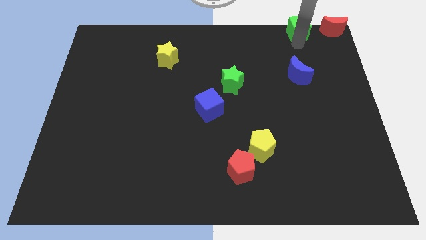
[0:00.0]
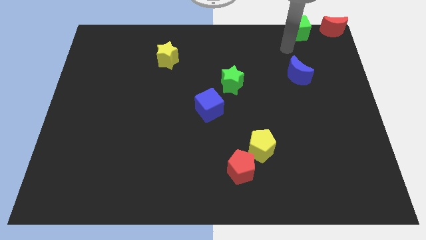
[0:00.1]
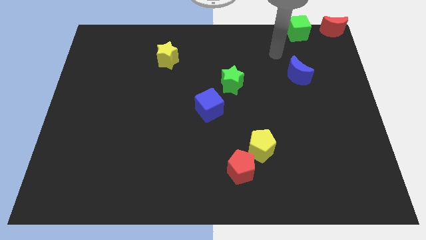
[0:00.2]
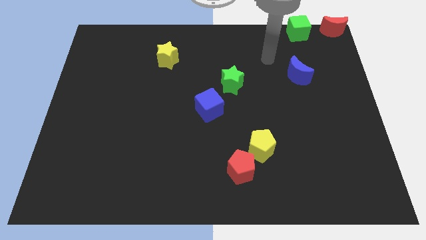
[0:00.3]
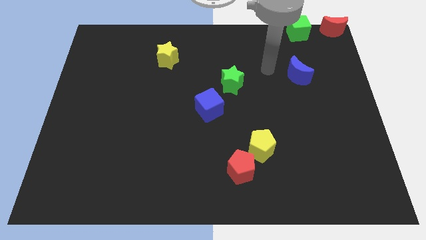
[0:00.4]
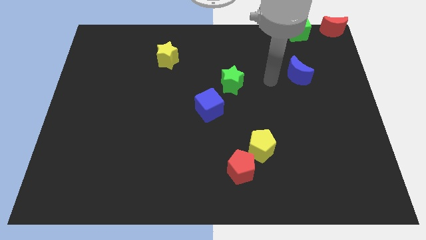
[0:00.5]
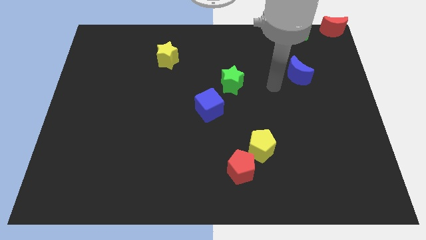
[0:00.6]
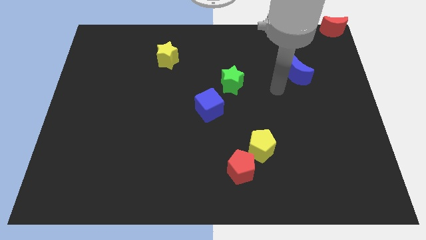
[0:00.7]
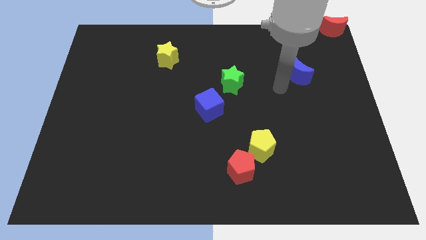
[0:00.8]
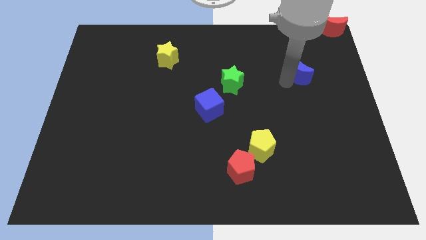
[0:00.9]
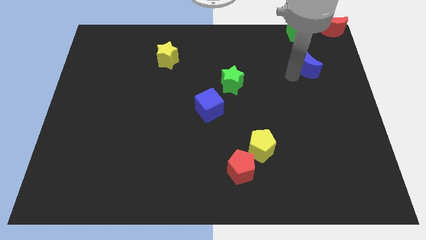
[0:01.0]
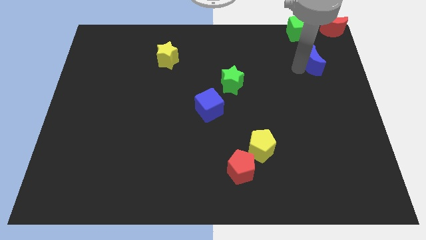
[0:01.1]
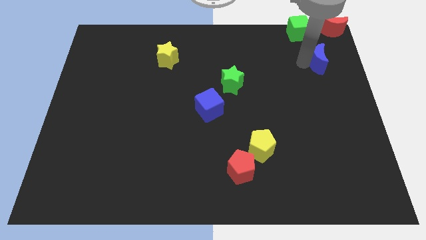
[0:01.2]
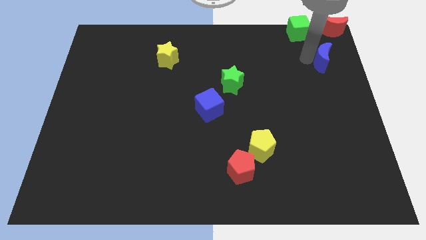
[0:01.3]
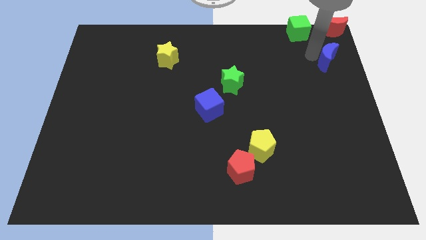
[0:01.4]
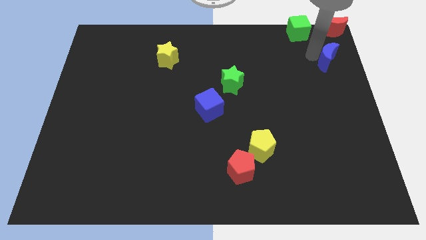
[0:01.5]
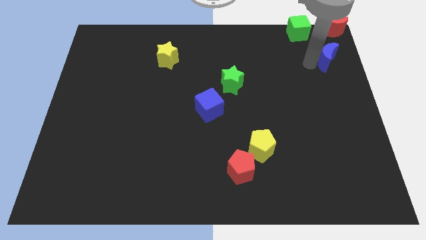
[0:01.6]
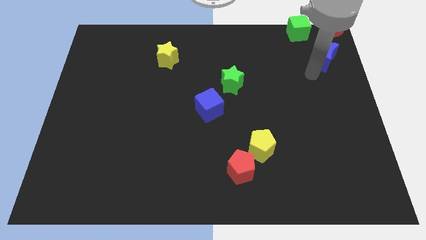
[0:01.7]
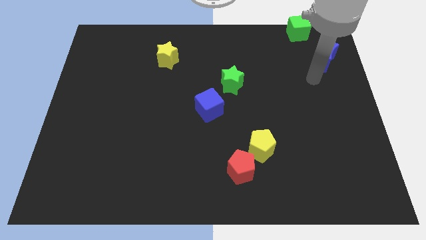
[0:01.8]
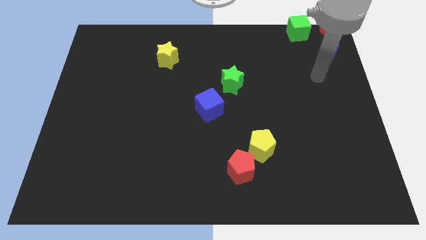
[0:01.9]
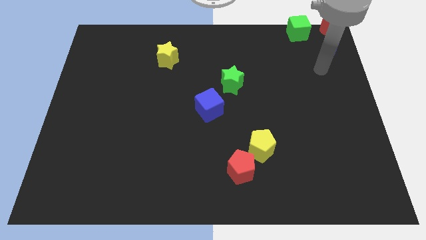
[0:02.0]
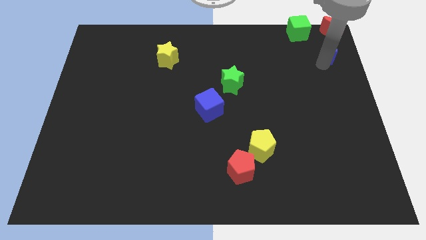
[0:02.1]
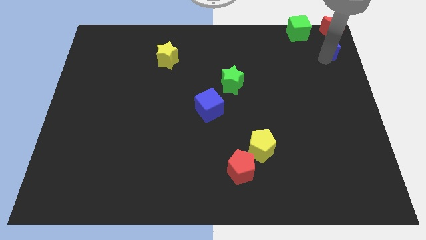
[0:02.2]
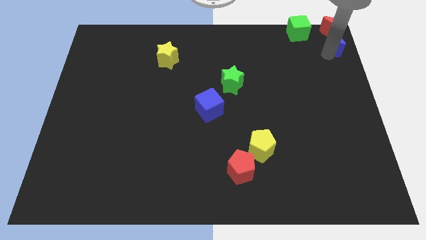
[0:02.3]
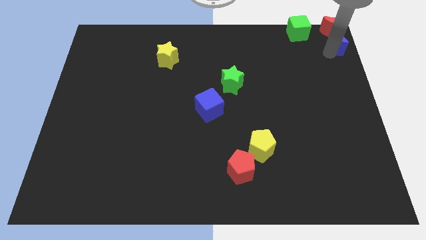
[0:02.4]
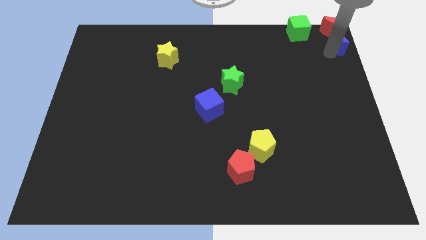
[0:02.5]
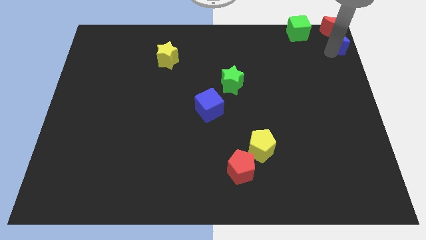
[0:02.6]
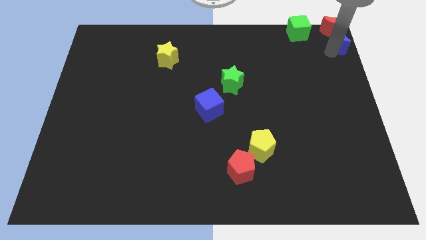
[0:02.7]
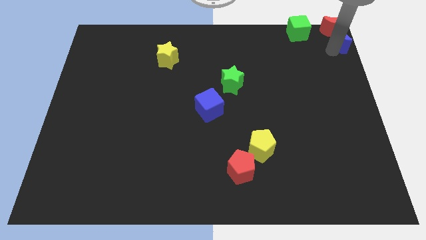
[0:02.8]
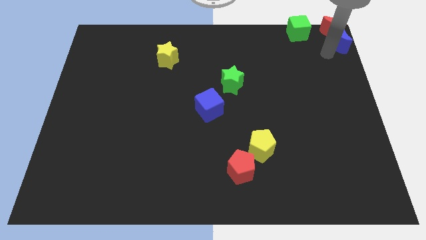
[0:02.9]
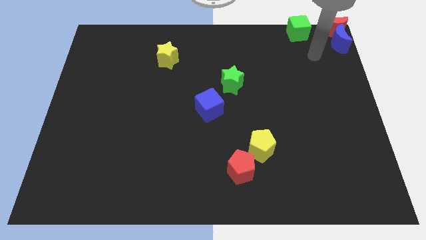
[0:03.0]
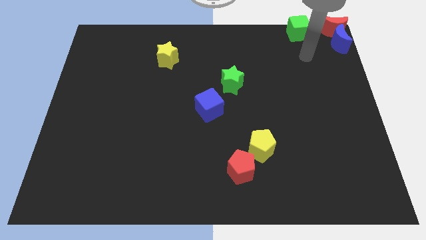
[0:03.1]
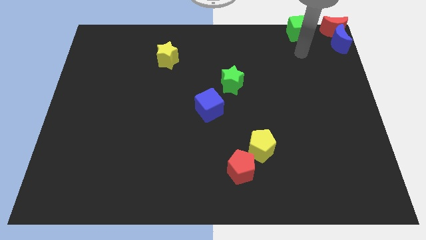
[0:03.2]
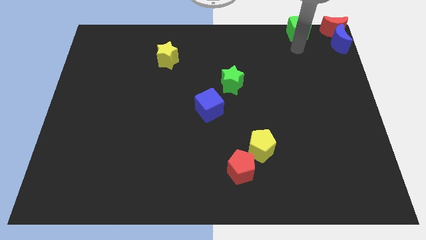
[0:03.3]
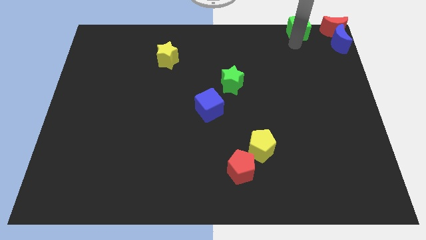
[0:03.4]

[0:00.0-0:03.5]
place blue moon to the bottom of red moon

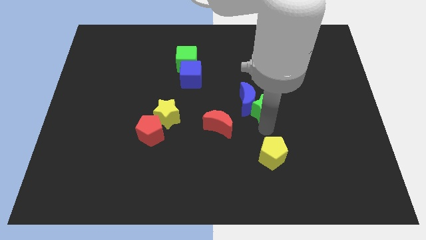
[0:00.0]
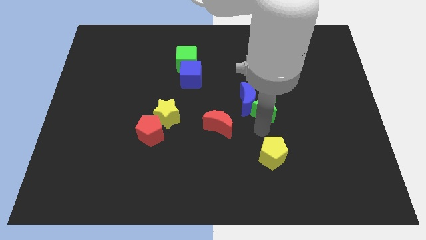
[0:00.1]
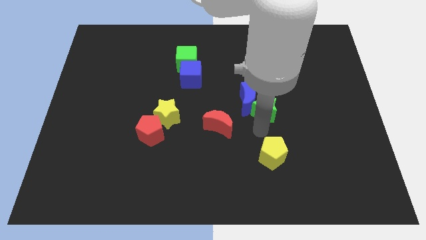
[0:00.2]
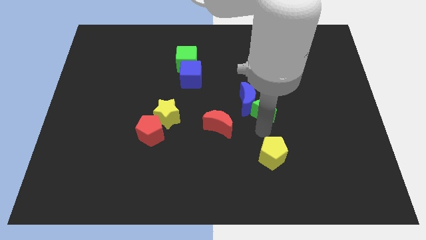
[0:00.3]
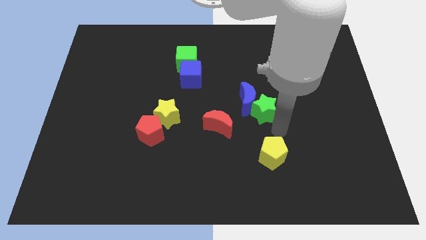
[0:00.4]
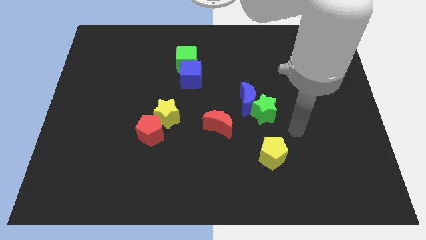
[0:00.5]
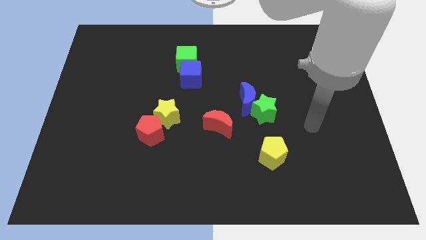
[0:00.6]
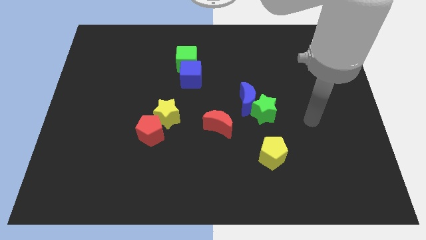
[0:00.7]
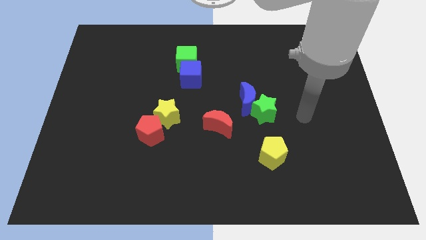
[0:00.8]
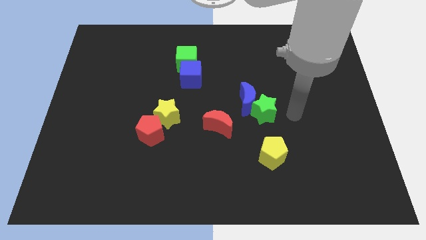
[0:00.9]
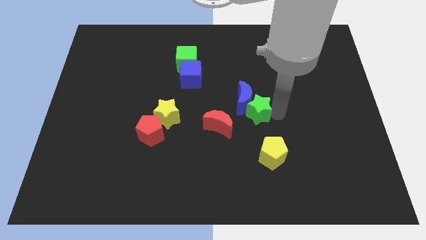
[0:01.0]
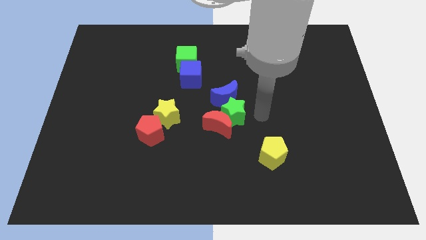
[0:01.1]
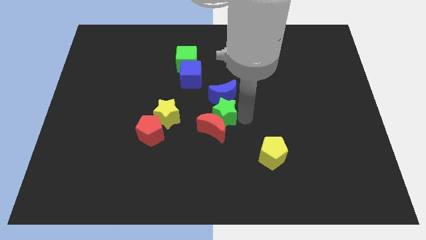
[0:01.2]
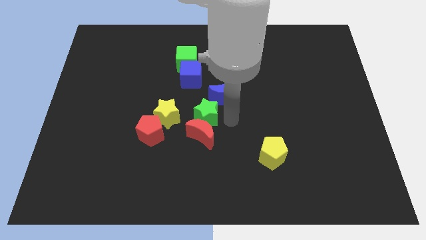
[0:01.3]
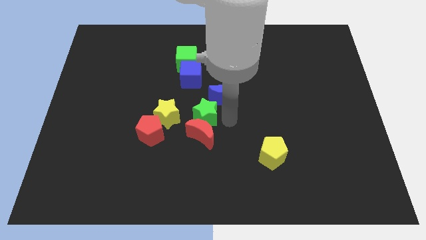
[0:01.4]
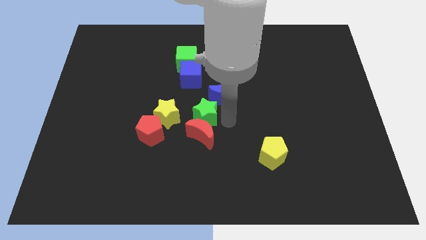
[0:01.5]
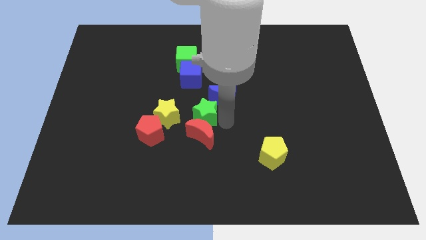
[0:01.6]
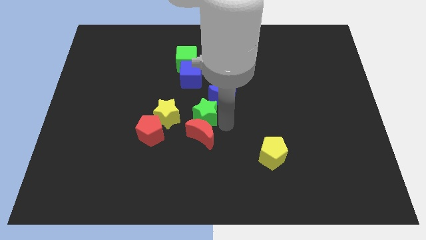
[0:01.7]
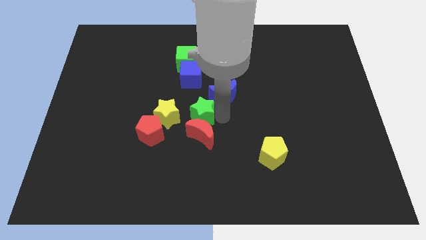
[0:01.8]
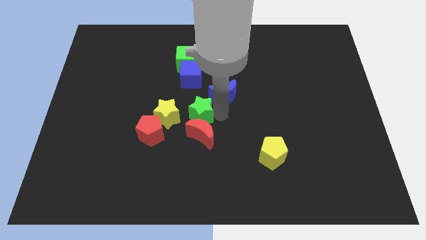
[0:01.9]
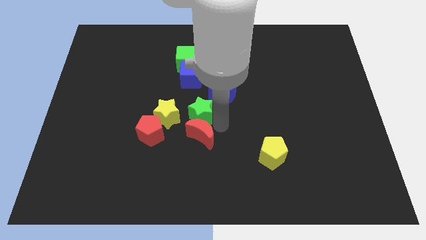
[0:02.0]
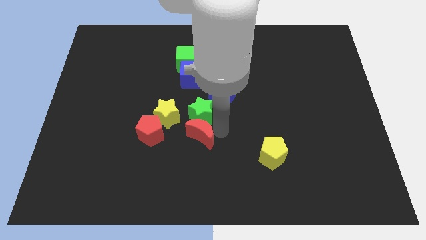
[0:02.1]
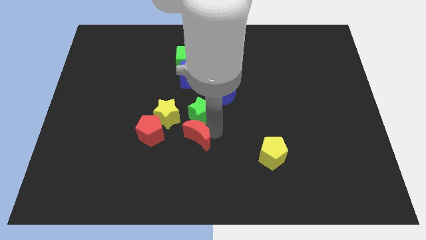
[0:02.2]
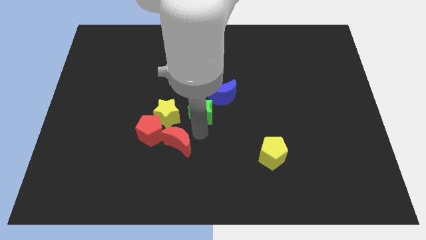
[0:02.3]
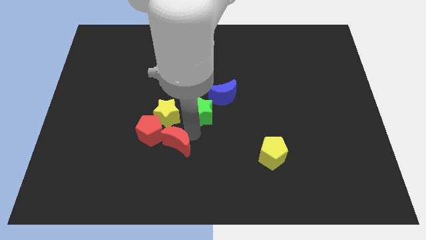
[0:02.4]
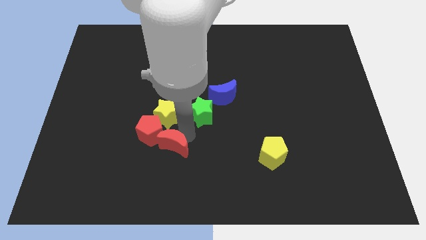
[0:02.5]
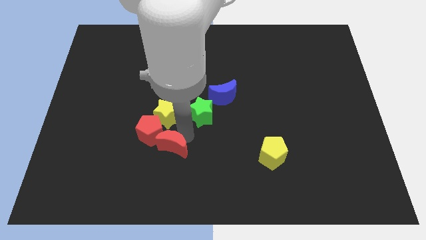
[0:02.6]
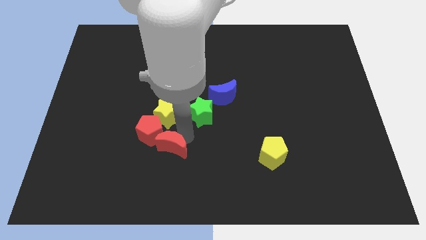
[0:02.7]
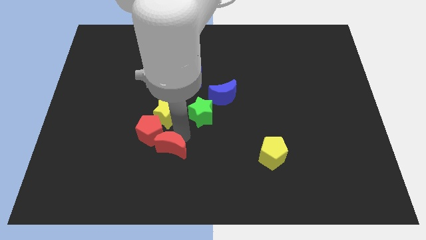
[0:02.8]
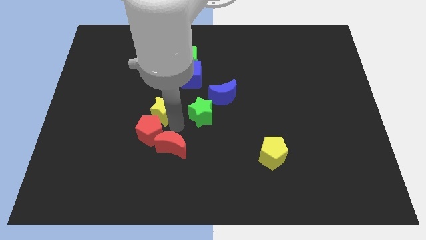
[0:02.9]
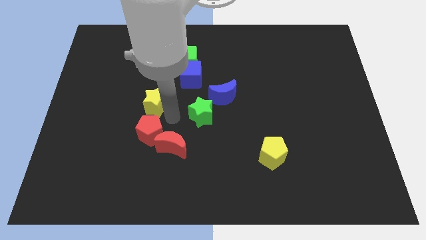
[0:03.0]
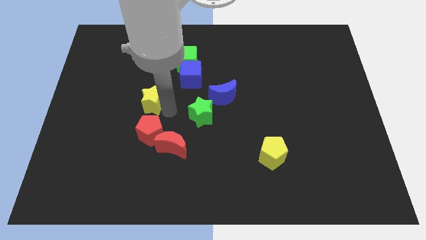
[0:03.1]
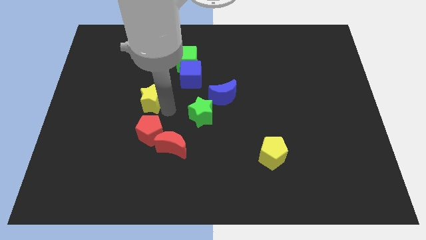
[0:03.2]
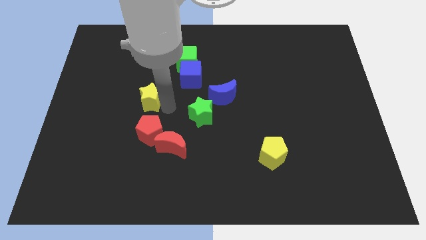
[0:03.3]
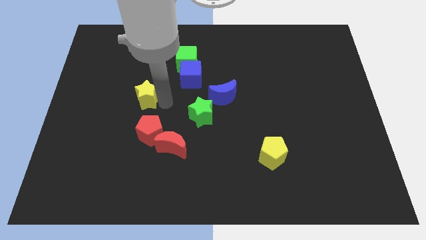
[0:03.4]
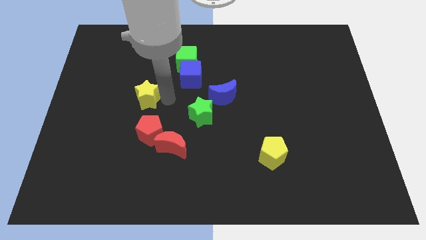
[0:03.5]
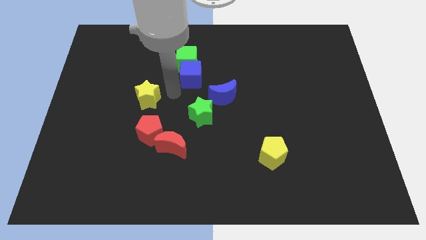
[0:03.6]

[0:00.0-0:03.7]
separate the yellow star from a group of objects

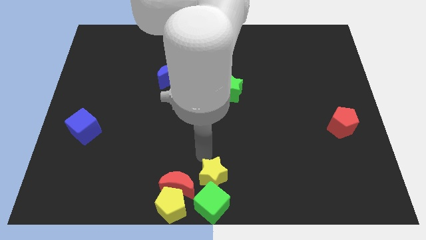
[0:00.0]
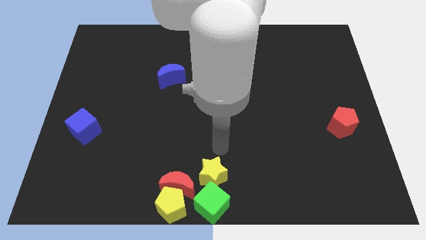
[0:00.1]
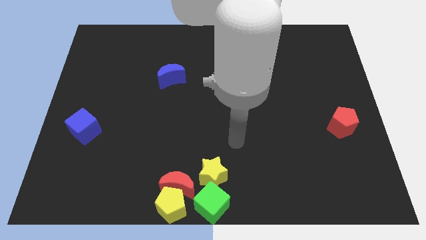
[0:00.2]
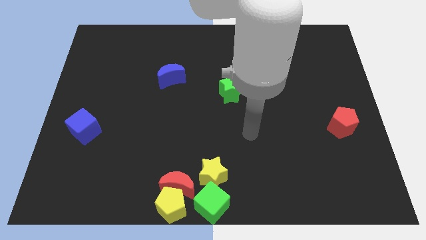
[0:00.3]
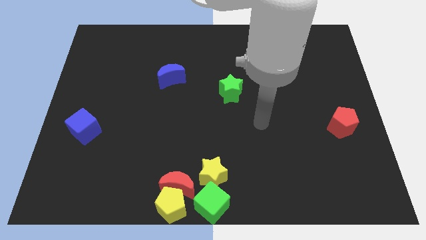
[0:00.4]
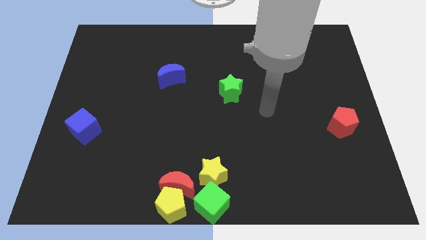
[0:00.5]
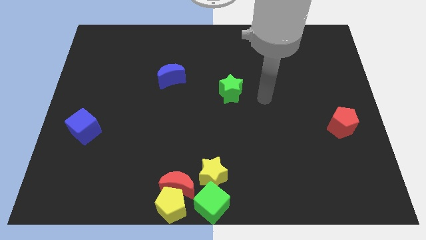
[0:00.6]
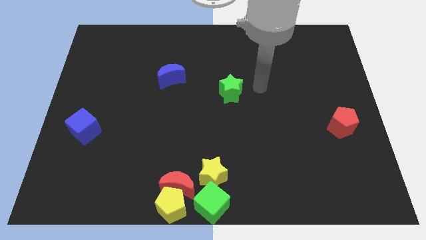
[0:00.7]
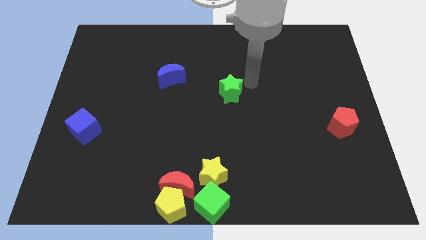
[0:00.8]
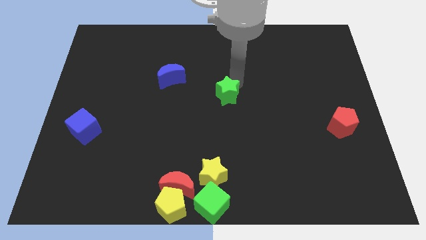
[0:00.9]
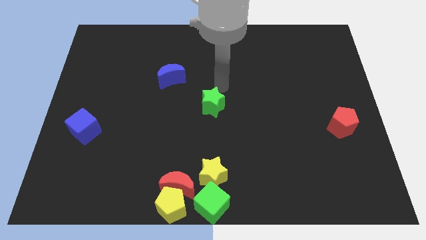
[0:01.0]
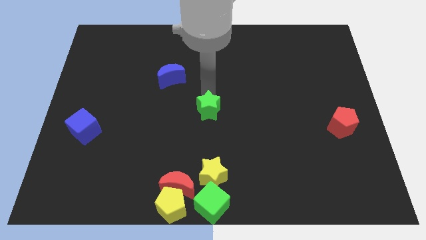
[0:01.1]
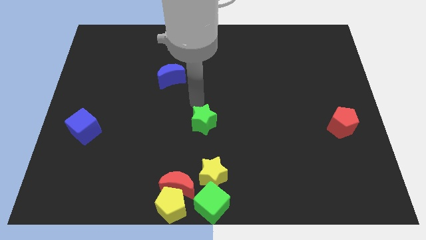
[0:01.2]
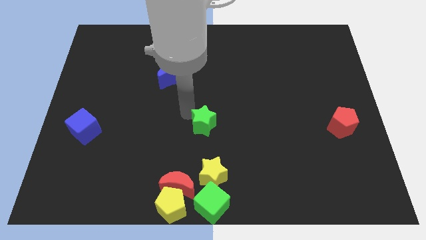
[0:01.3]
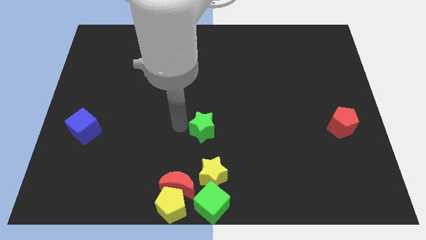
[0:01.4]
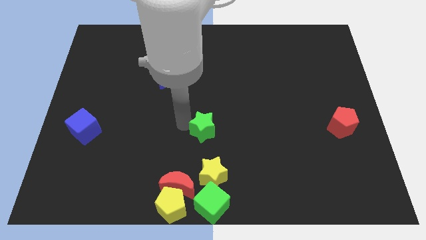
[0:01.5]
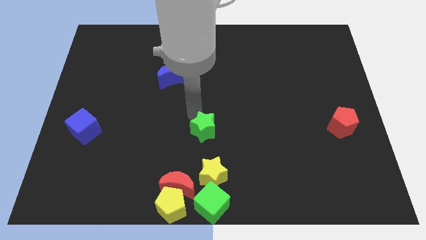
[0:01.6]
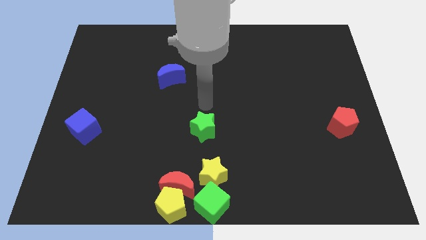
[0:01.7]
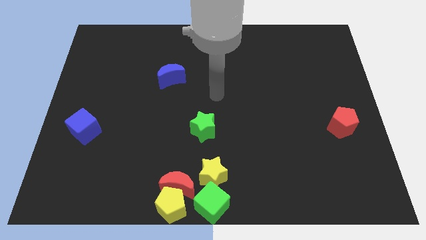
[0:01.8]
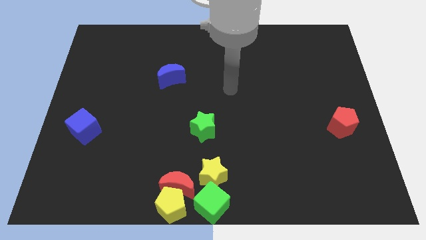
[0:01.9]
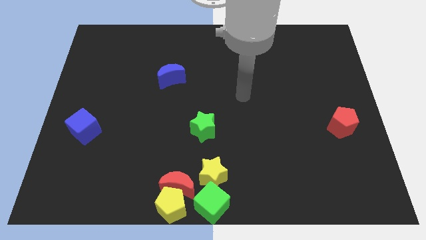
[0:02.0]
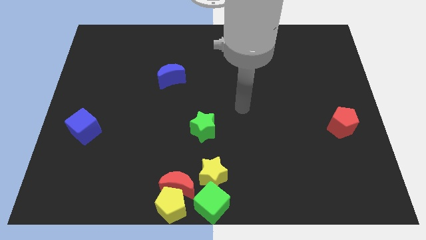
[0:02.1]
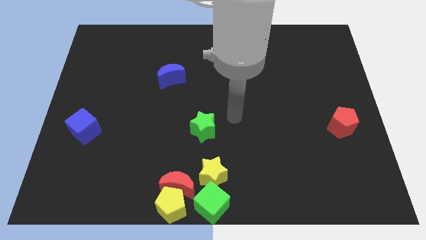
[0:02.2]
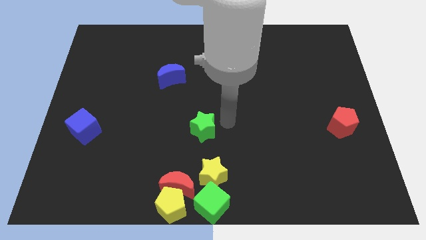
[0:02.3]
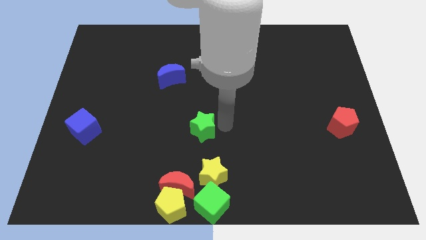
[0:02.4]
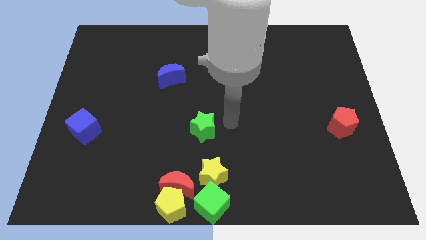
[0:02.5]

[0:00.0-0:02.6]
move the green star towards the yellow star
